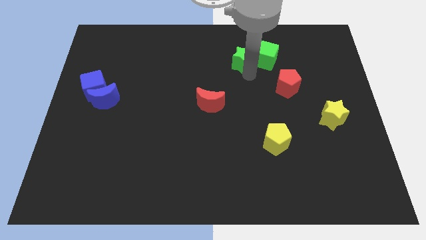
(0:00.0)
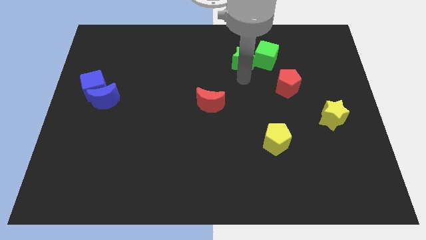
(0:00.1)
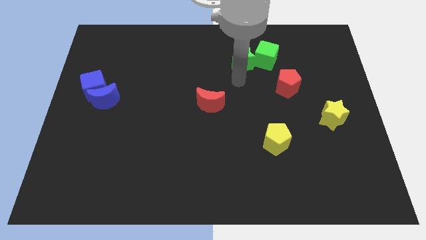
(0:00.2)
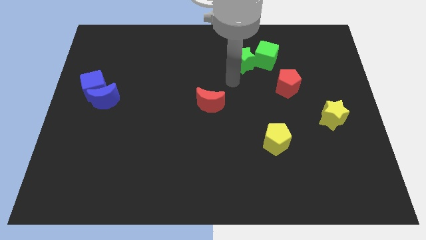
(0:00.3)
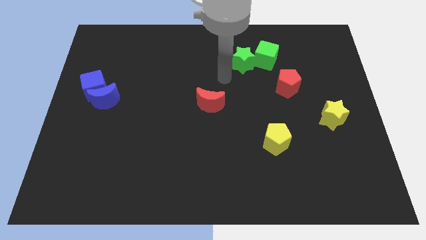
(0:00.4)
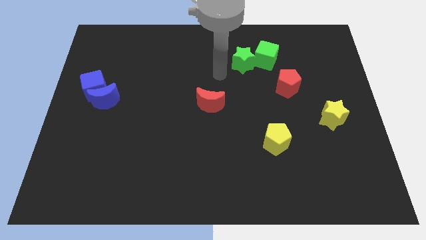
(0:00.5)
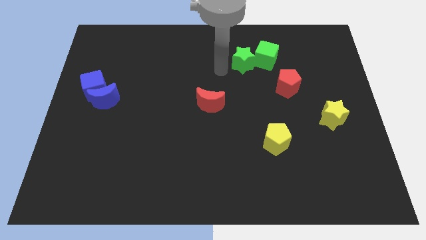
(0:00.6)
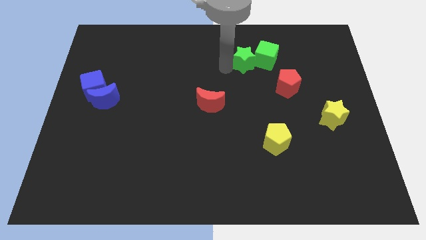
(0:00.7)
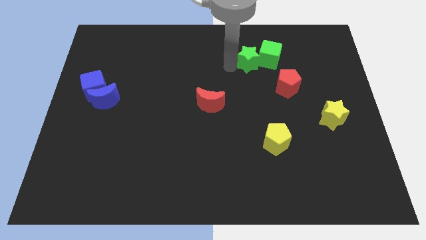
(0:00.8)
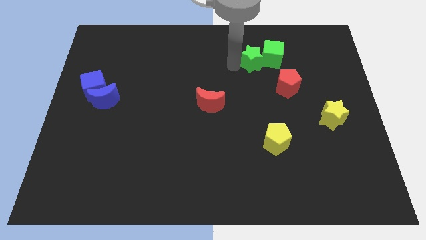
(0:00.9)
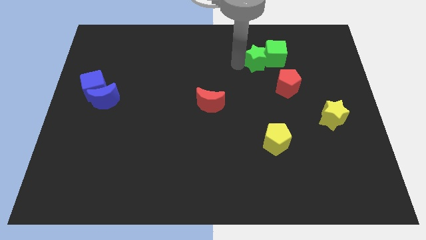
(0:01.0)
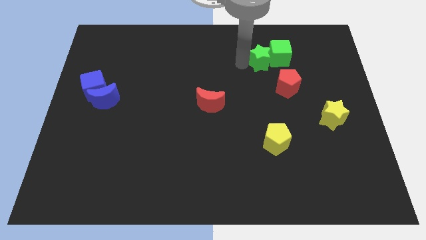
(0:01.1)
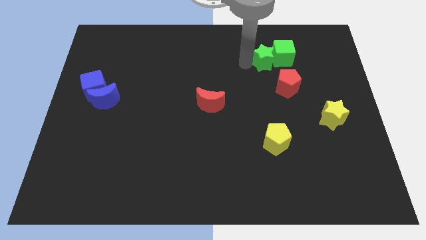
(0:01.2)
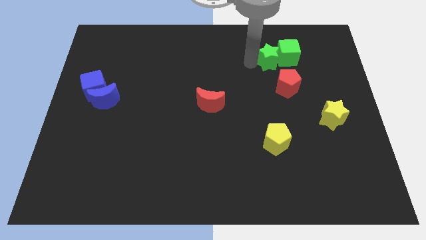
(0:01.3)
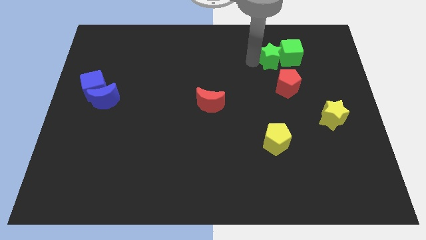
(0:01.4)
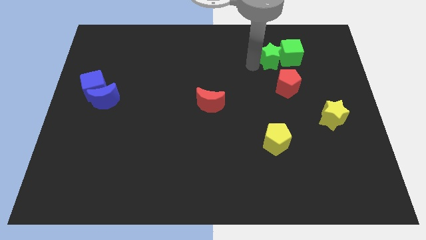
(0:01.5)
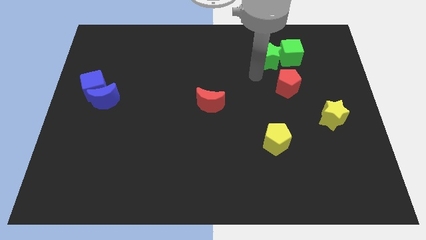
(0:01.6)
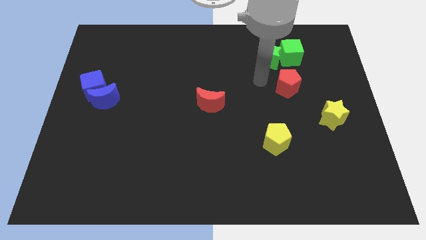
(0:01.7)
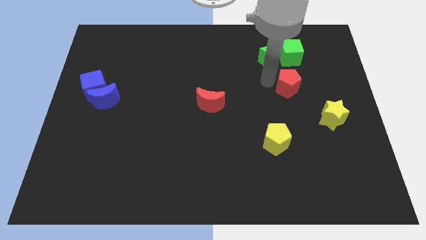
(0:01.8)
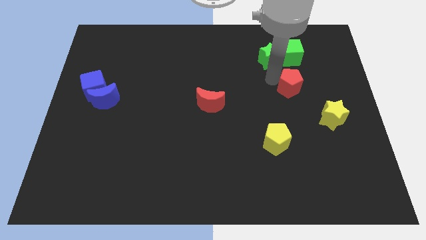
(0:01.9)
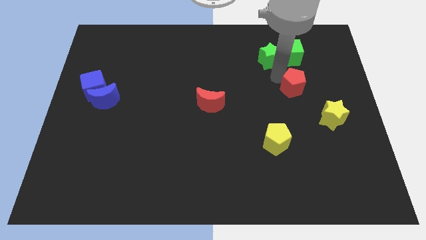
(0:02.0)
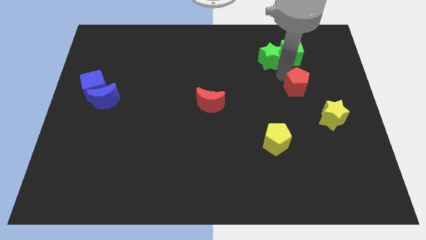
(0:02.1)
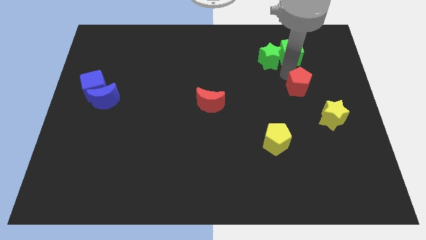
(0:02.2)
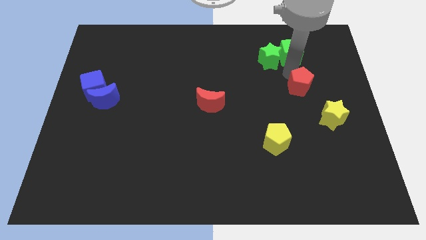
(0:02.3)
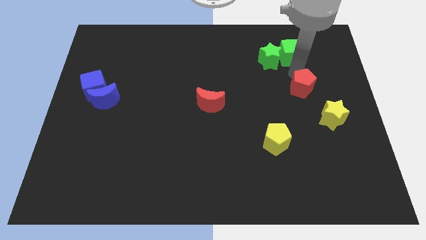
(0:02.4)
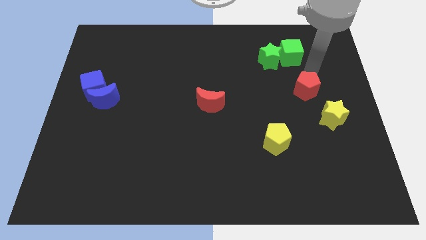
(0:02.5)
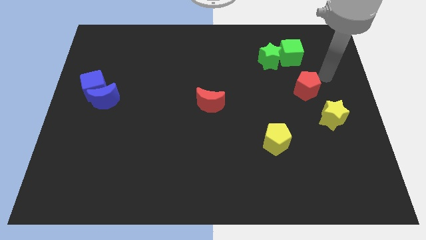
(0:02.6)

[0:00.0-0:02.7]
push the green blocks above the red pentagon

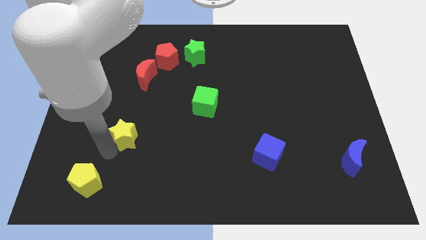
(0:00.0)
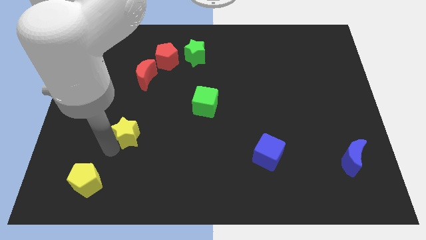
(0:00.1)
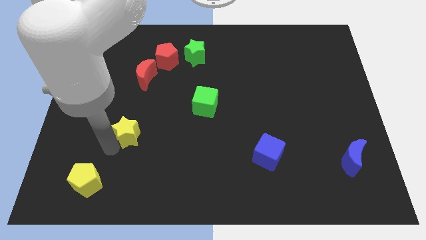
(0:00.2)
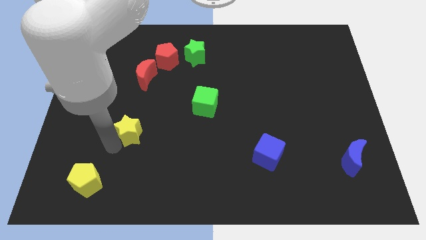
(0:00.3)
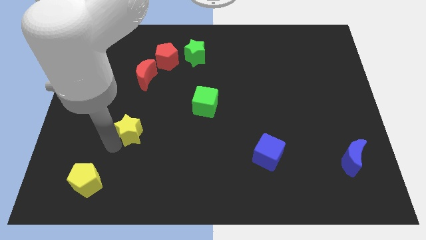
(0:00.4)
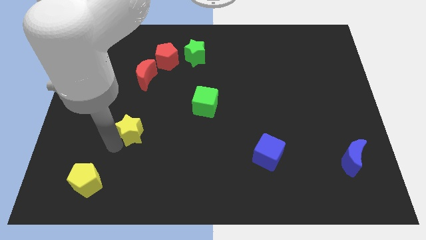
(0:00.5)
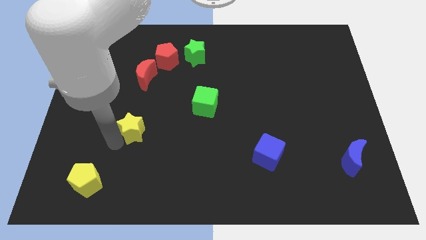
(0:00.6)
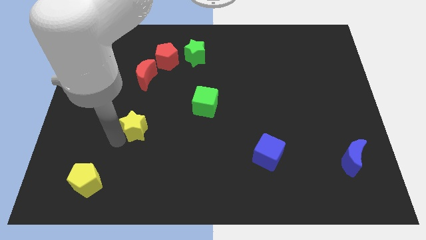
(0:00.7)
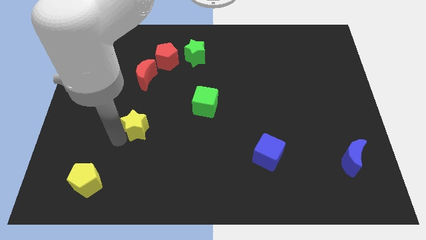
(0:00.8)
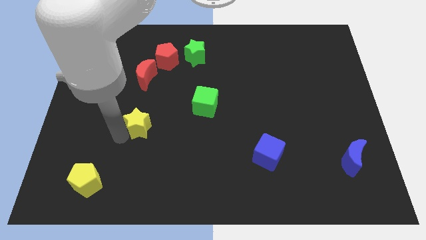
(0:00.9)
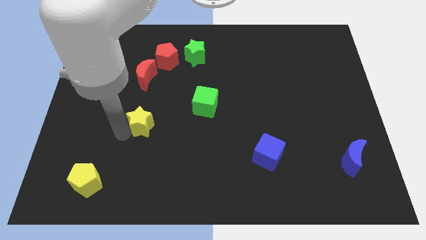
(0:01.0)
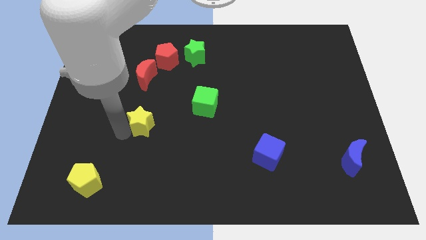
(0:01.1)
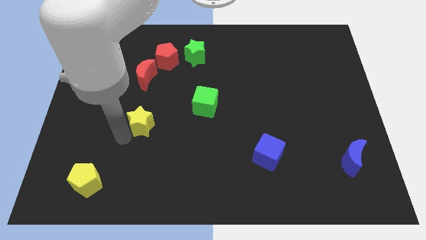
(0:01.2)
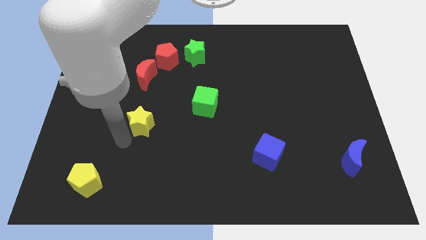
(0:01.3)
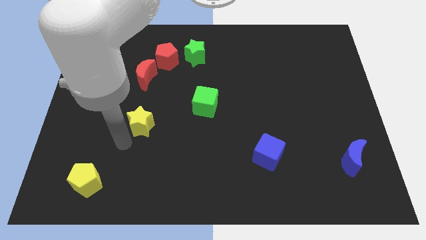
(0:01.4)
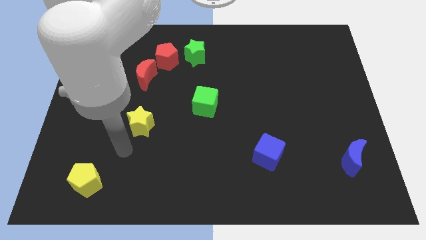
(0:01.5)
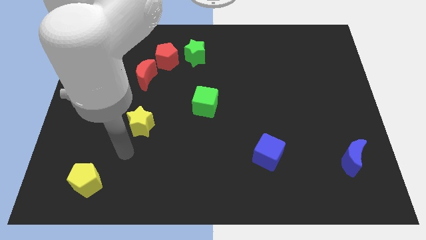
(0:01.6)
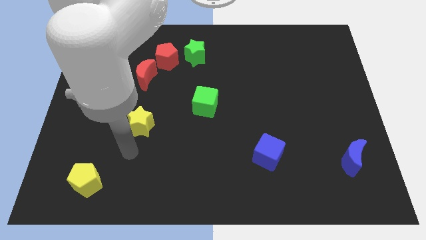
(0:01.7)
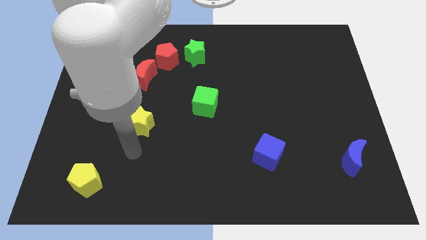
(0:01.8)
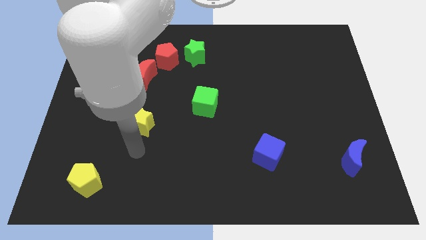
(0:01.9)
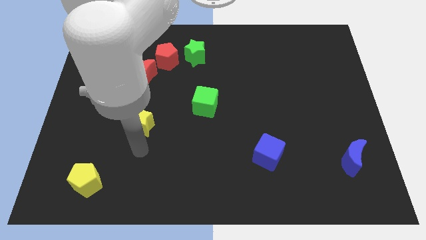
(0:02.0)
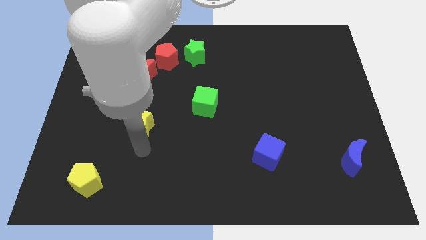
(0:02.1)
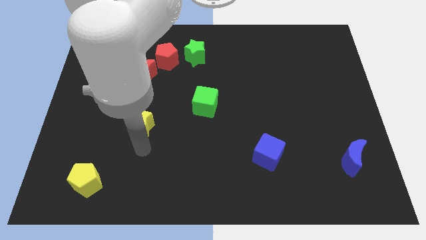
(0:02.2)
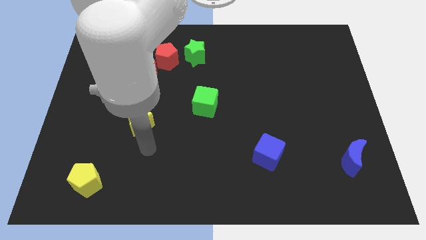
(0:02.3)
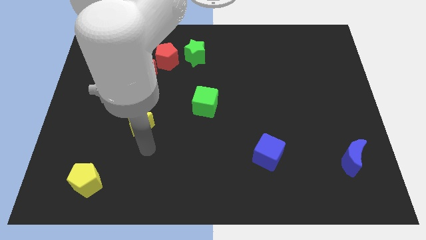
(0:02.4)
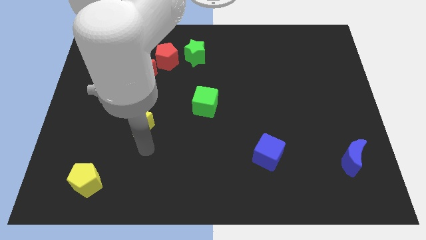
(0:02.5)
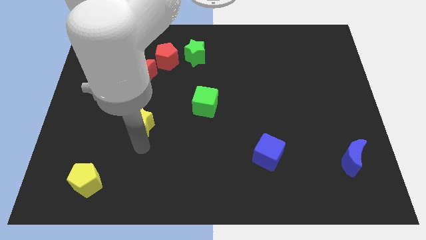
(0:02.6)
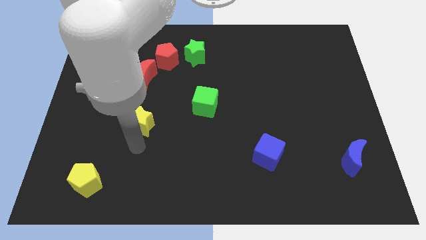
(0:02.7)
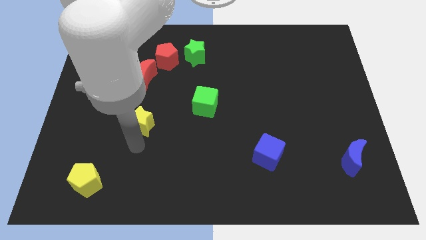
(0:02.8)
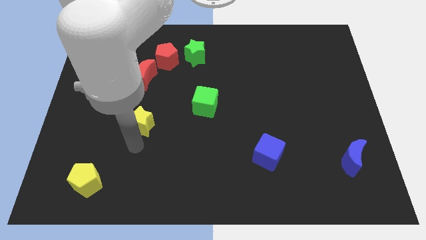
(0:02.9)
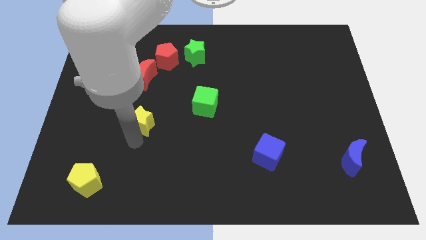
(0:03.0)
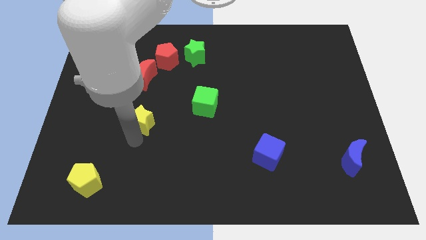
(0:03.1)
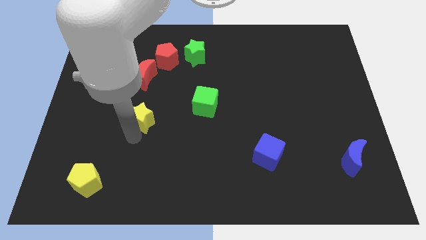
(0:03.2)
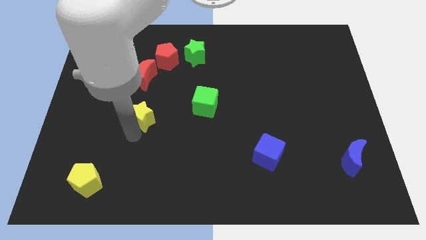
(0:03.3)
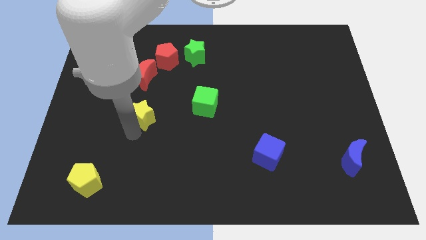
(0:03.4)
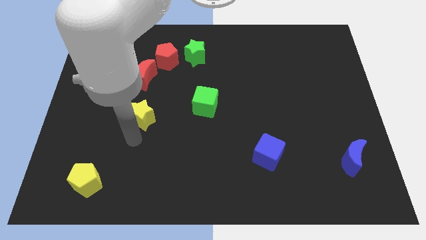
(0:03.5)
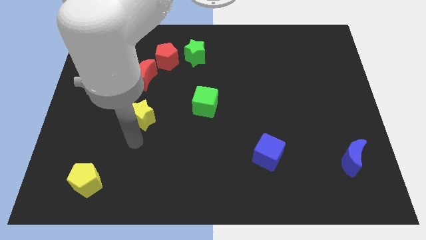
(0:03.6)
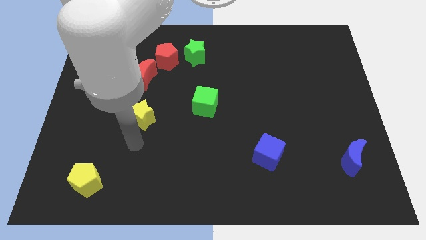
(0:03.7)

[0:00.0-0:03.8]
push the yellow star below the red crescent

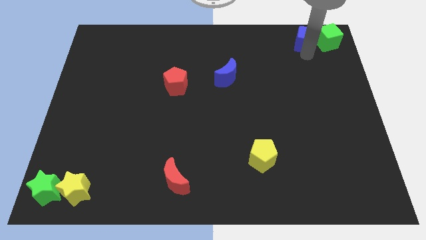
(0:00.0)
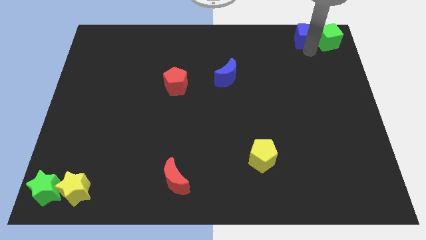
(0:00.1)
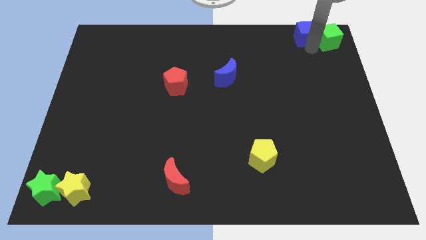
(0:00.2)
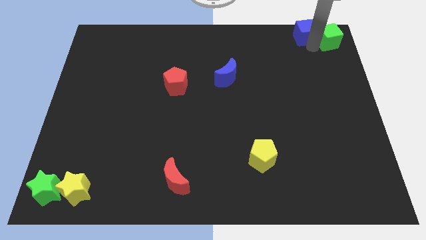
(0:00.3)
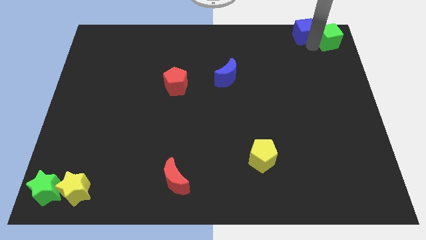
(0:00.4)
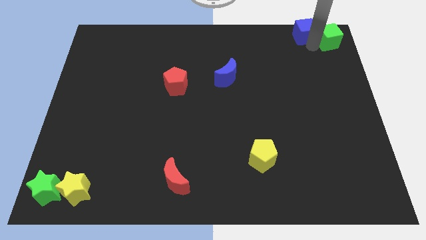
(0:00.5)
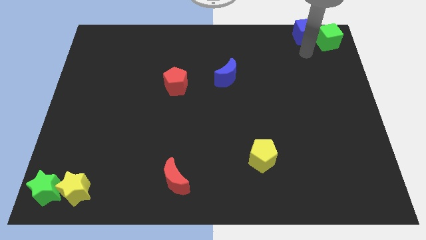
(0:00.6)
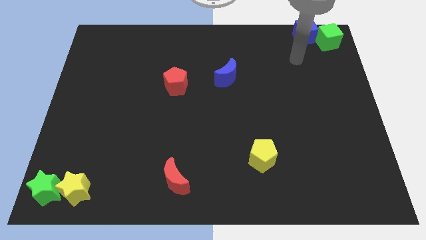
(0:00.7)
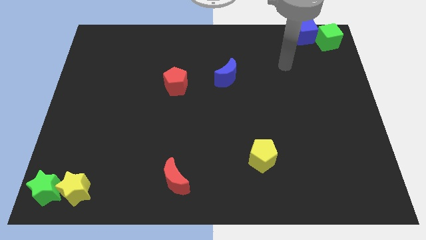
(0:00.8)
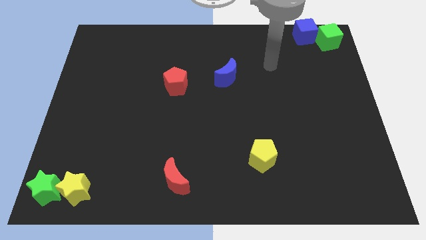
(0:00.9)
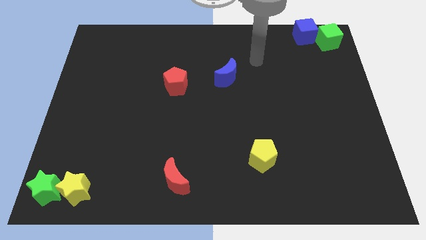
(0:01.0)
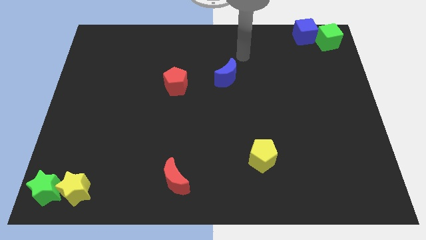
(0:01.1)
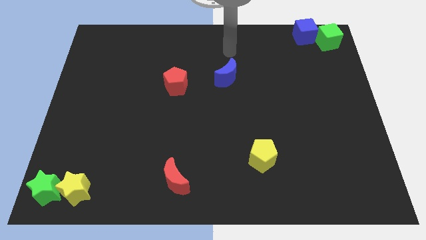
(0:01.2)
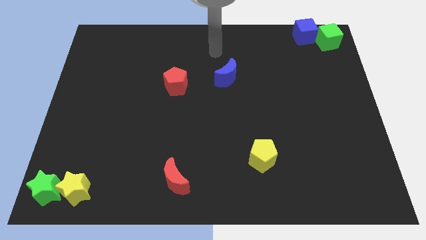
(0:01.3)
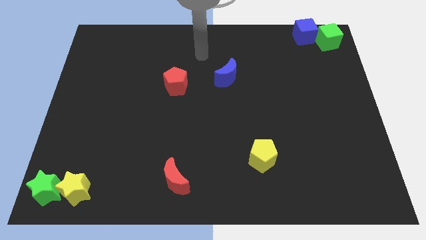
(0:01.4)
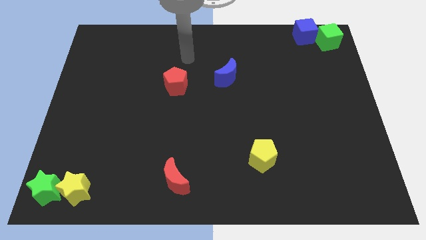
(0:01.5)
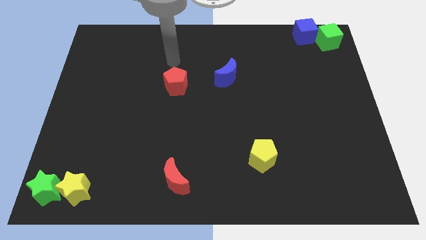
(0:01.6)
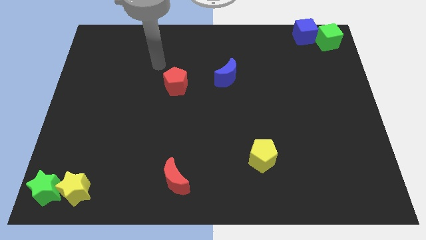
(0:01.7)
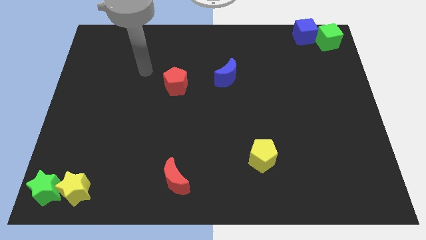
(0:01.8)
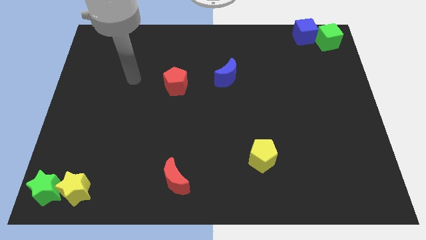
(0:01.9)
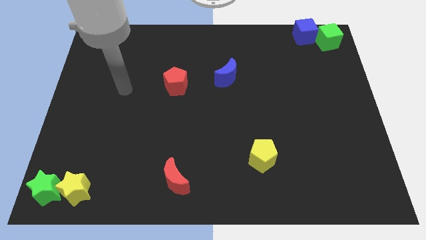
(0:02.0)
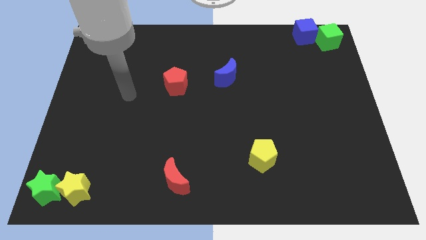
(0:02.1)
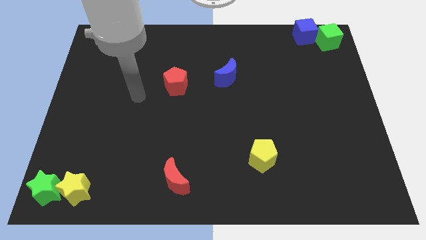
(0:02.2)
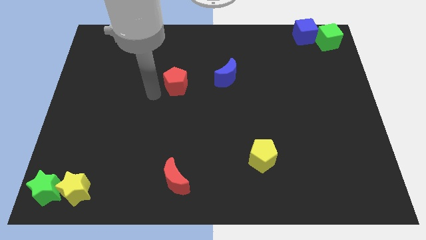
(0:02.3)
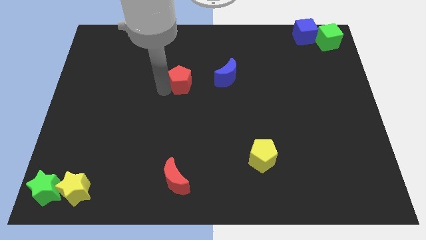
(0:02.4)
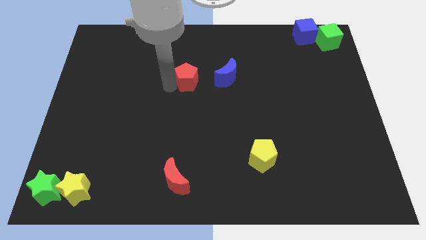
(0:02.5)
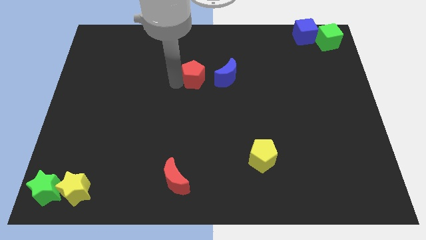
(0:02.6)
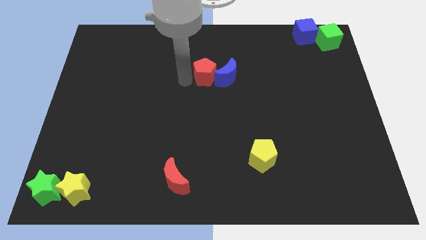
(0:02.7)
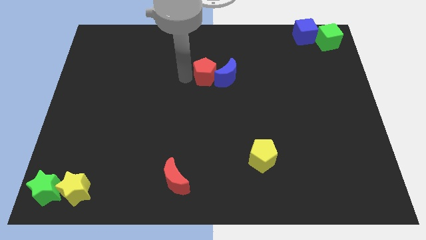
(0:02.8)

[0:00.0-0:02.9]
move red pentagon close to blue moon
